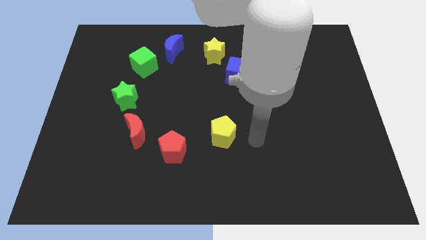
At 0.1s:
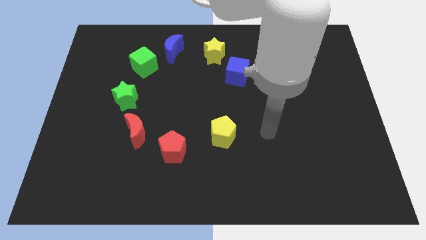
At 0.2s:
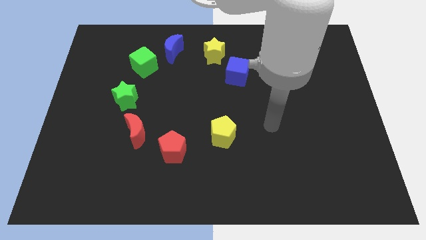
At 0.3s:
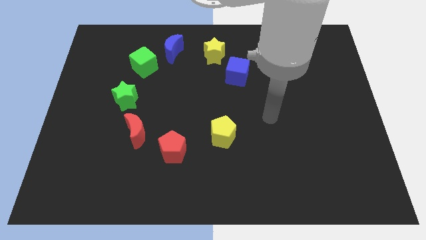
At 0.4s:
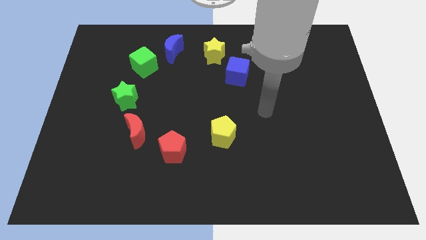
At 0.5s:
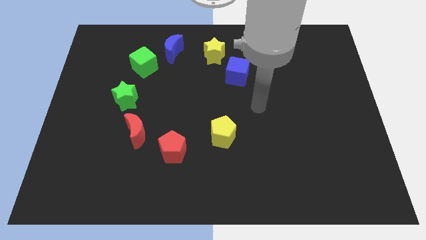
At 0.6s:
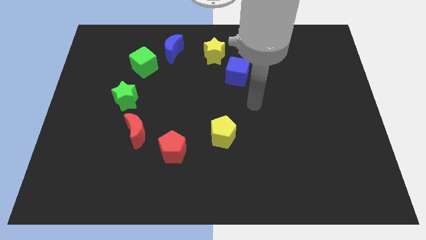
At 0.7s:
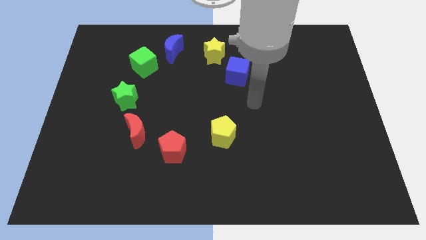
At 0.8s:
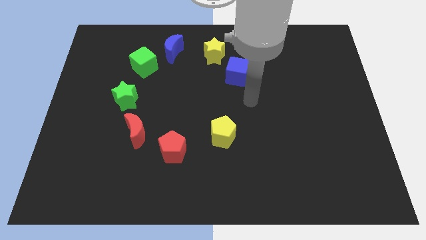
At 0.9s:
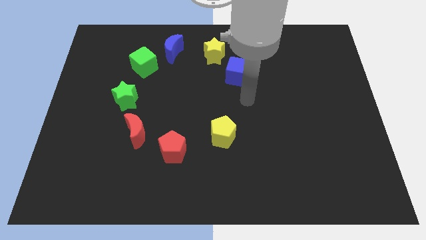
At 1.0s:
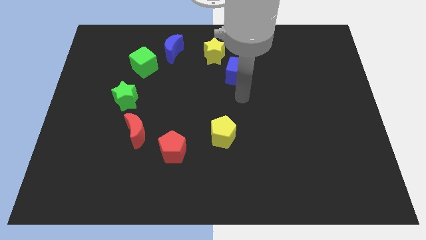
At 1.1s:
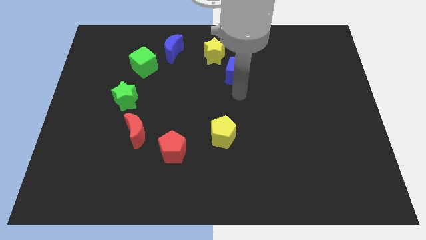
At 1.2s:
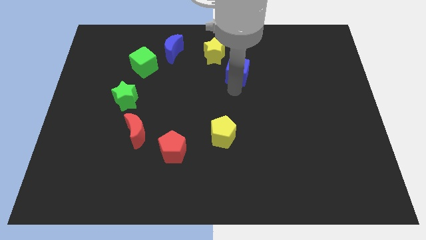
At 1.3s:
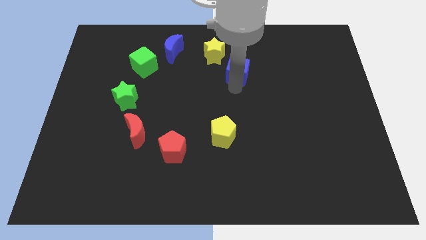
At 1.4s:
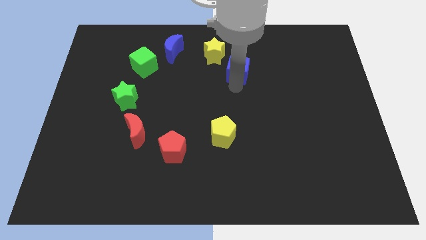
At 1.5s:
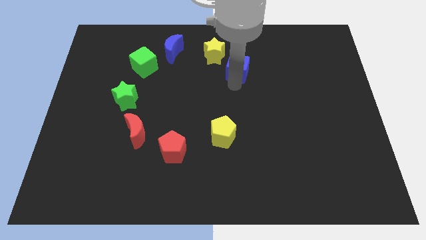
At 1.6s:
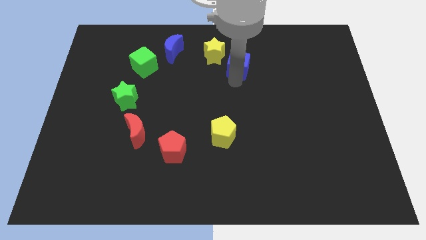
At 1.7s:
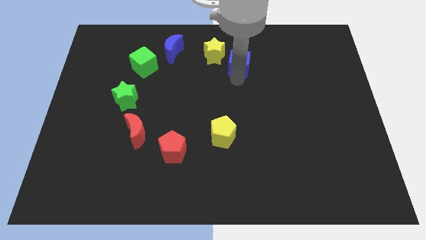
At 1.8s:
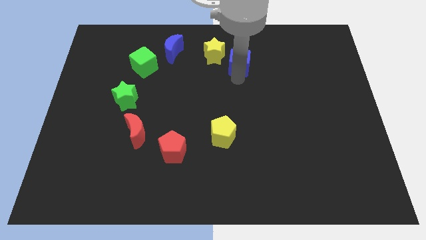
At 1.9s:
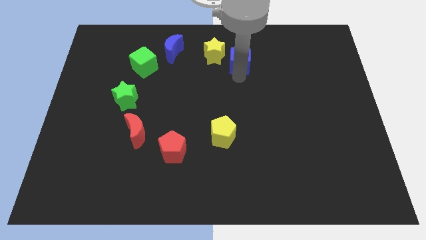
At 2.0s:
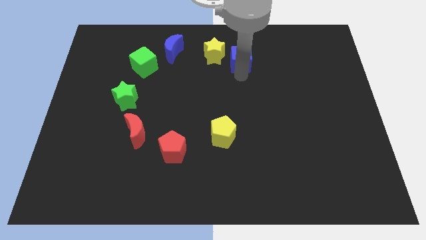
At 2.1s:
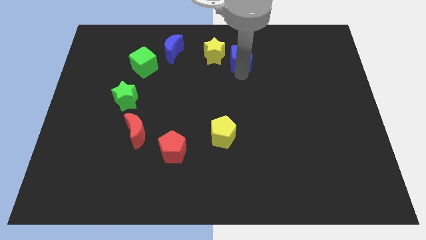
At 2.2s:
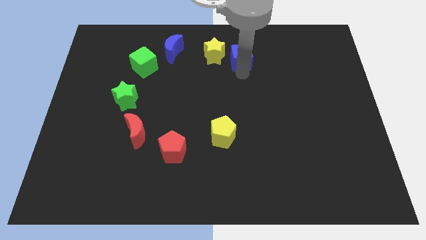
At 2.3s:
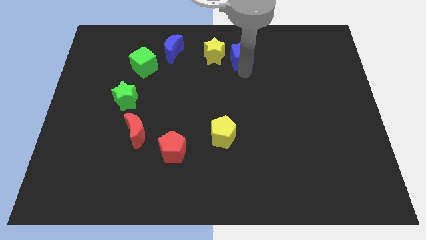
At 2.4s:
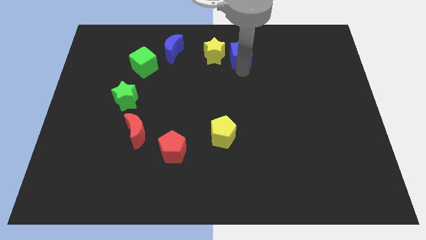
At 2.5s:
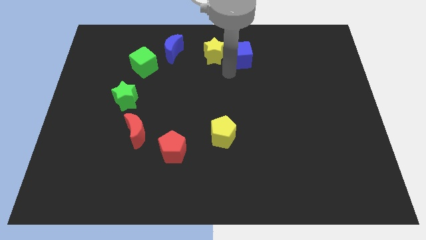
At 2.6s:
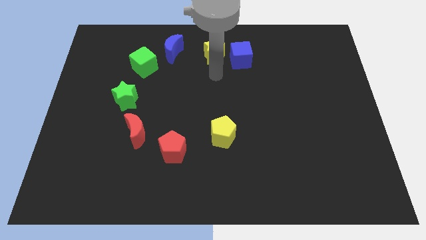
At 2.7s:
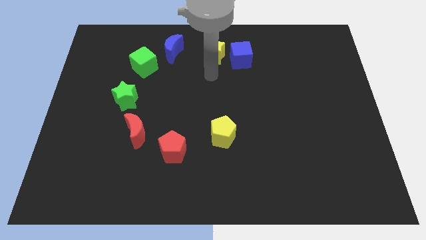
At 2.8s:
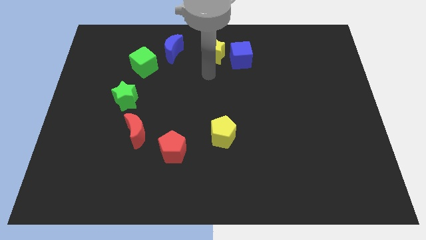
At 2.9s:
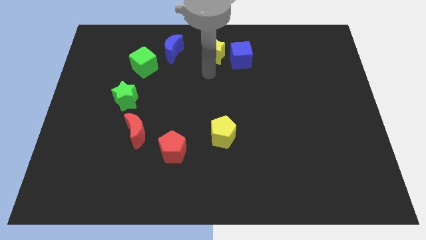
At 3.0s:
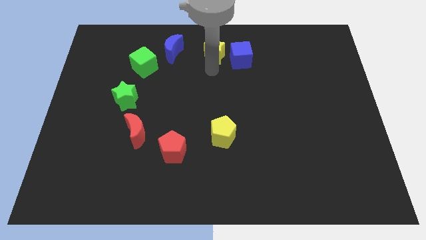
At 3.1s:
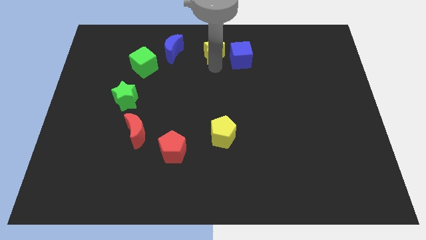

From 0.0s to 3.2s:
place blue cube to the right of yellow star

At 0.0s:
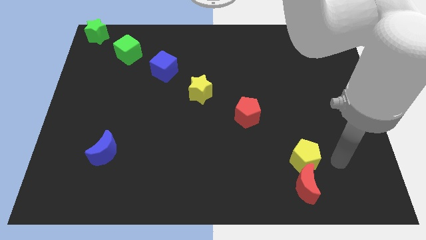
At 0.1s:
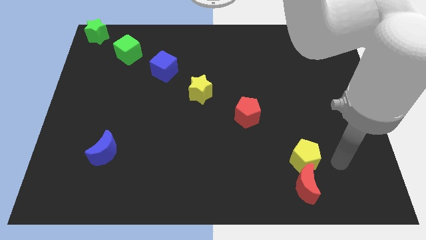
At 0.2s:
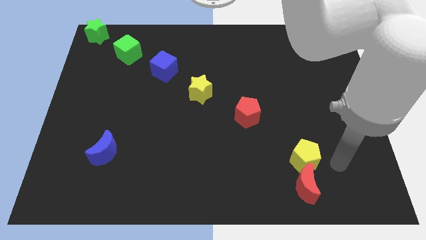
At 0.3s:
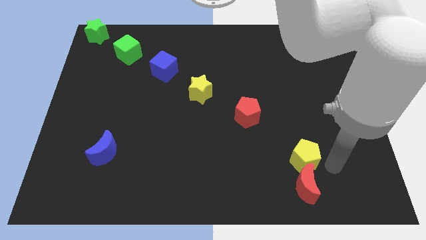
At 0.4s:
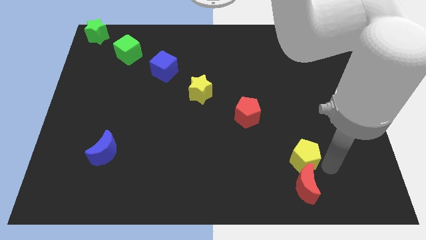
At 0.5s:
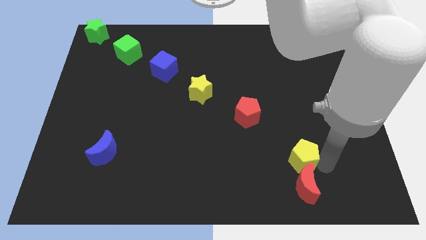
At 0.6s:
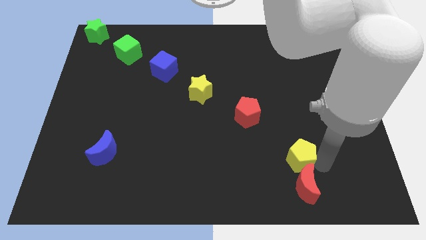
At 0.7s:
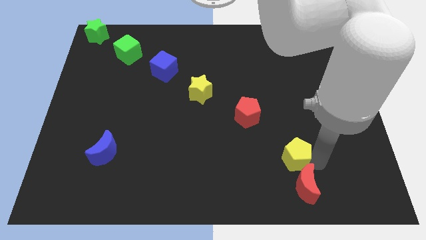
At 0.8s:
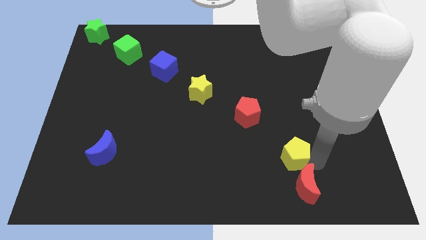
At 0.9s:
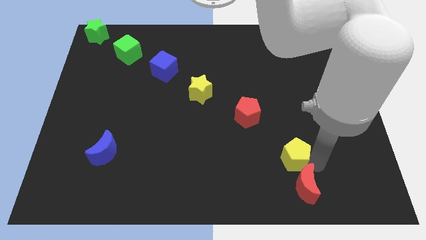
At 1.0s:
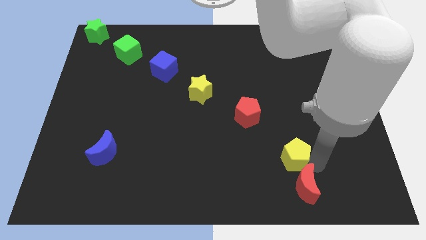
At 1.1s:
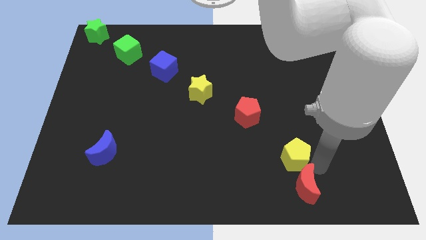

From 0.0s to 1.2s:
slightly push the yellow pentagon diagonally upwards

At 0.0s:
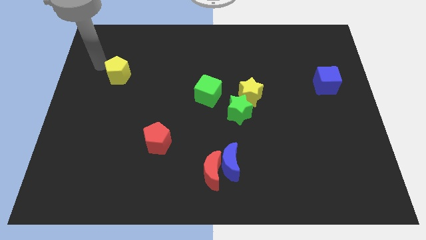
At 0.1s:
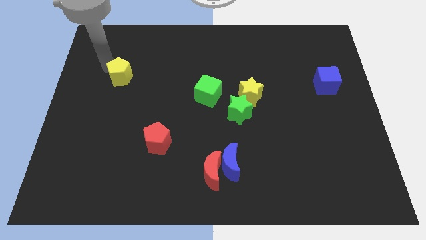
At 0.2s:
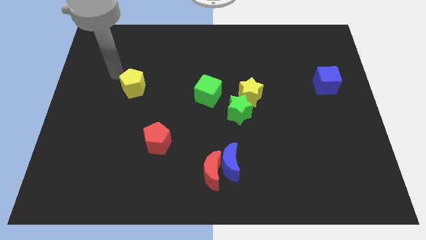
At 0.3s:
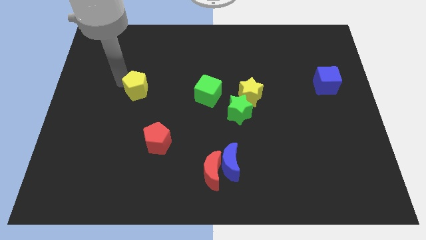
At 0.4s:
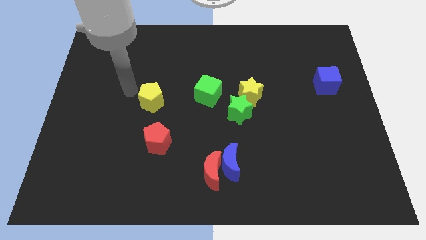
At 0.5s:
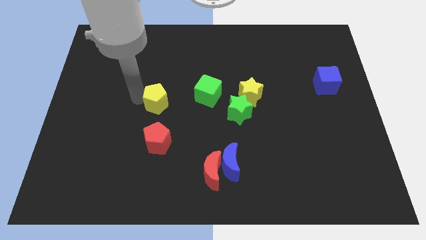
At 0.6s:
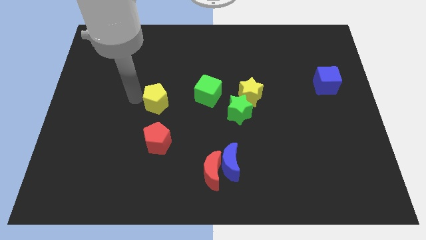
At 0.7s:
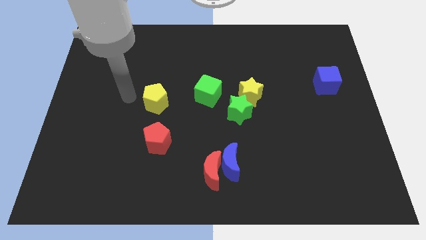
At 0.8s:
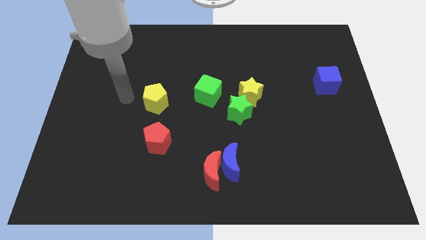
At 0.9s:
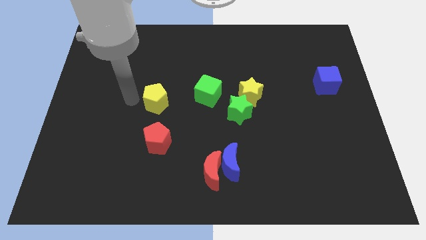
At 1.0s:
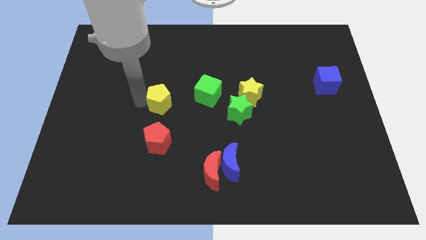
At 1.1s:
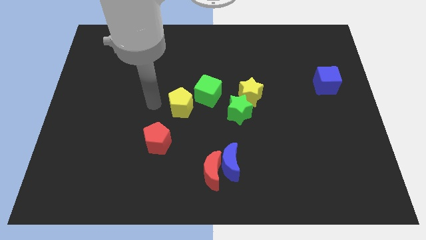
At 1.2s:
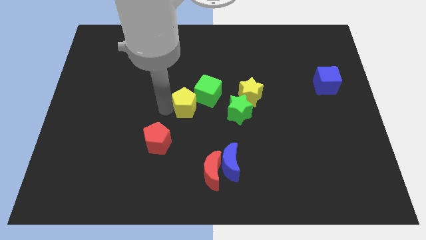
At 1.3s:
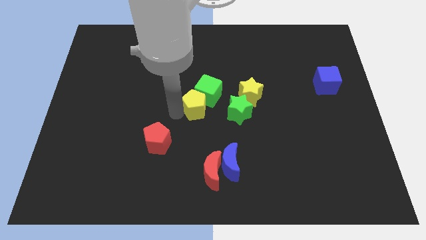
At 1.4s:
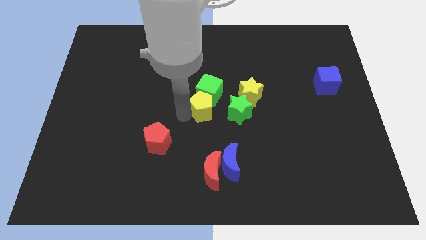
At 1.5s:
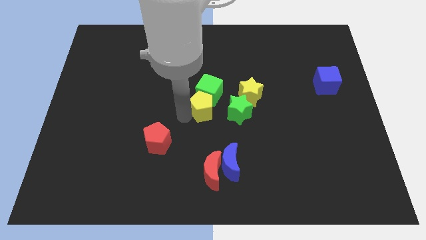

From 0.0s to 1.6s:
move the yellow pentagon into the bottom side of the green cube

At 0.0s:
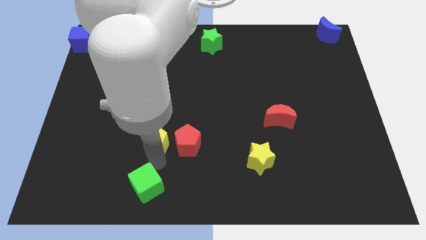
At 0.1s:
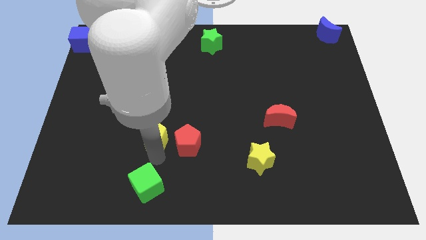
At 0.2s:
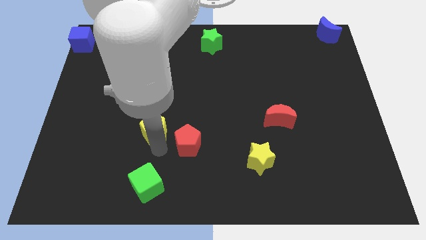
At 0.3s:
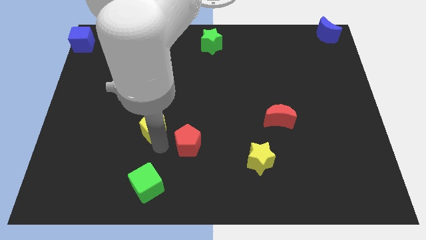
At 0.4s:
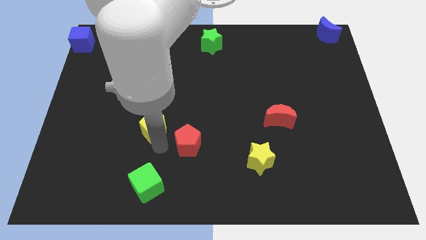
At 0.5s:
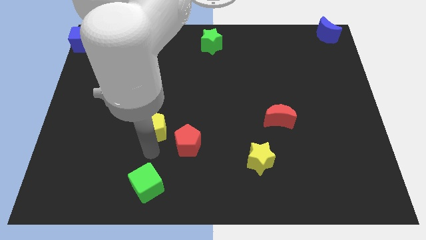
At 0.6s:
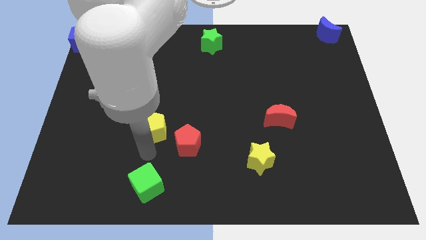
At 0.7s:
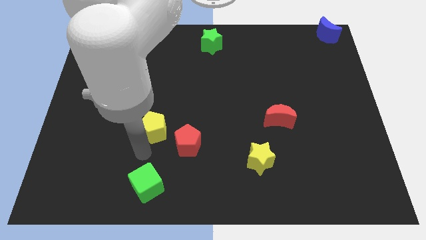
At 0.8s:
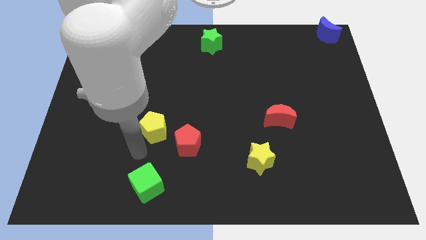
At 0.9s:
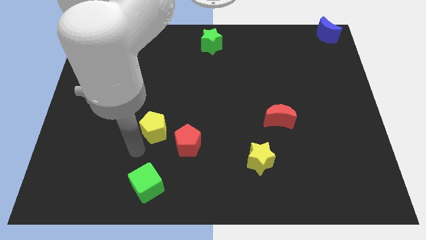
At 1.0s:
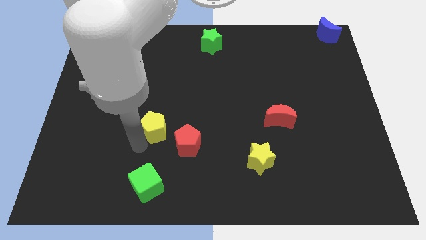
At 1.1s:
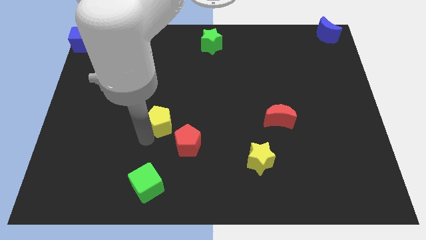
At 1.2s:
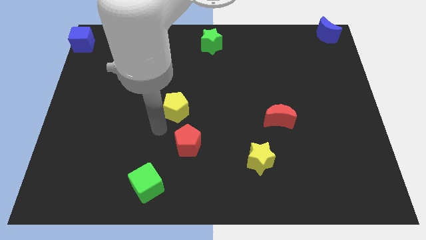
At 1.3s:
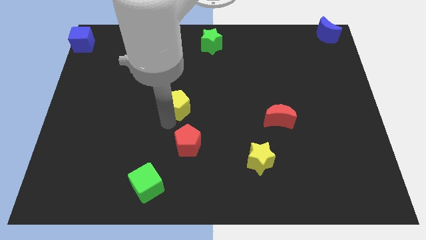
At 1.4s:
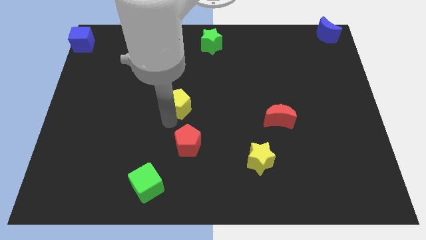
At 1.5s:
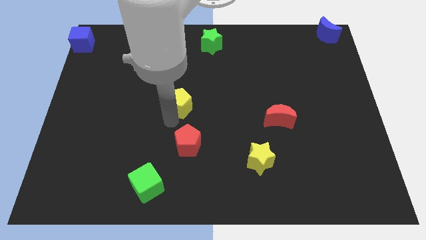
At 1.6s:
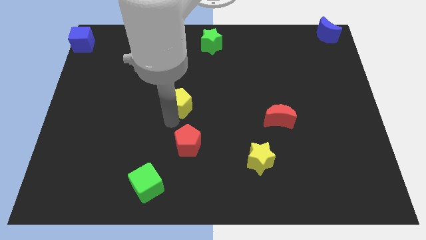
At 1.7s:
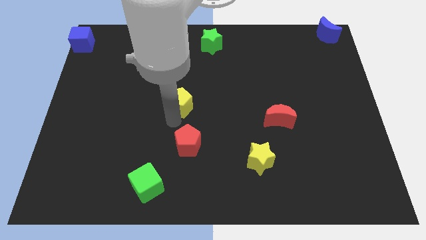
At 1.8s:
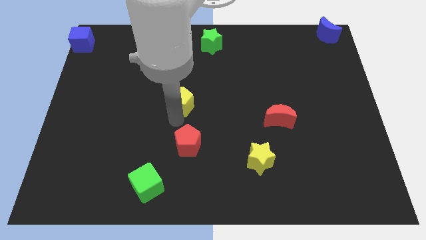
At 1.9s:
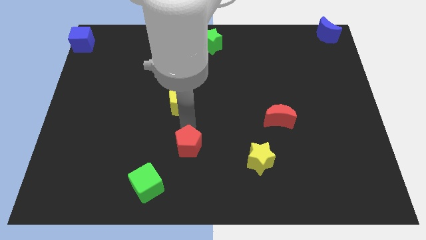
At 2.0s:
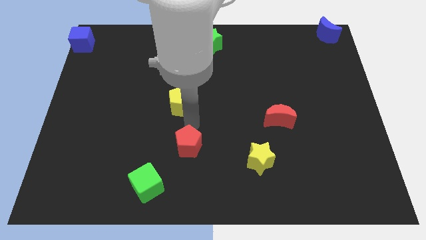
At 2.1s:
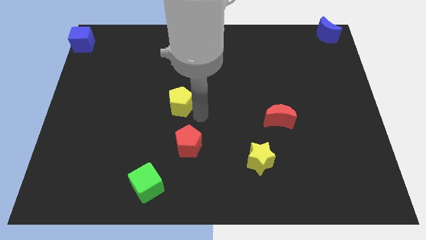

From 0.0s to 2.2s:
place the yellow pentagon in between the green star and red pentagon

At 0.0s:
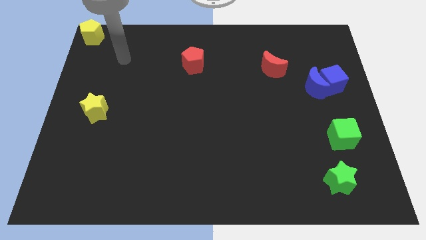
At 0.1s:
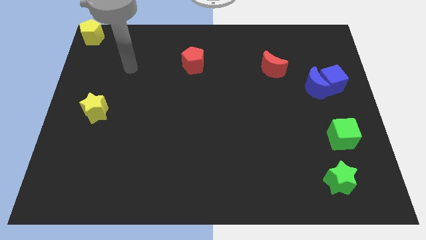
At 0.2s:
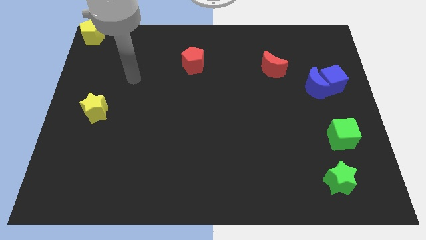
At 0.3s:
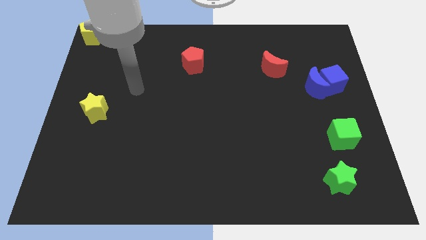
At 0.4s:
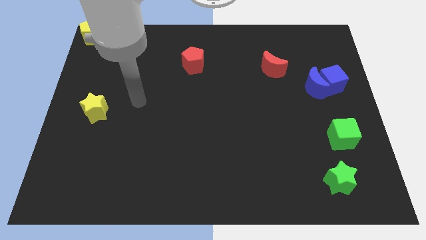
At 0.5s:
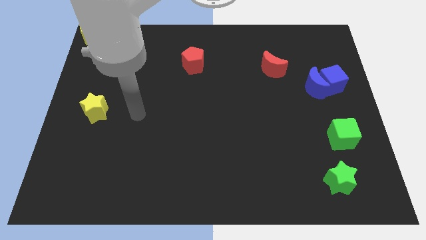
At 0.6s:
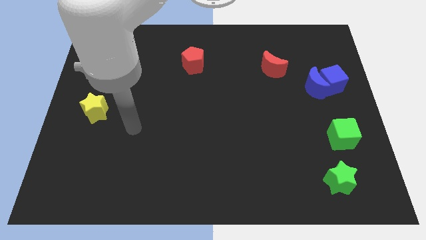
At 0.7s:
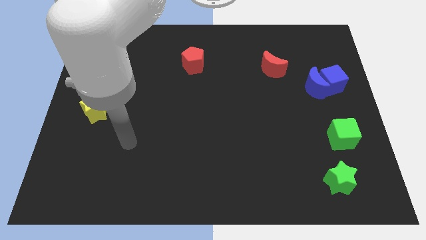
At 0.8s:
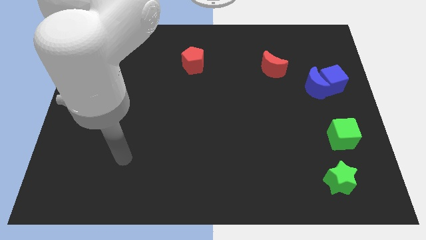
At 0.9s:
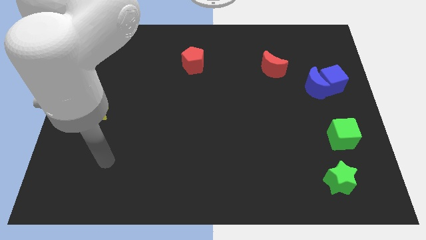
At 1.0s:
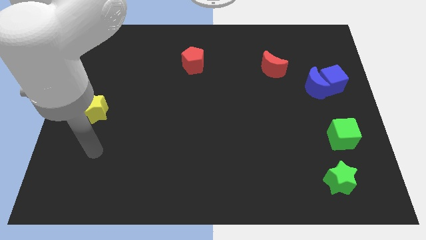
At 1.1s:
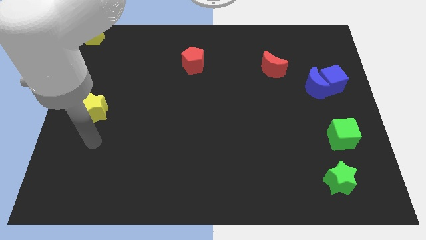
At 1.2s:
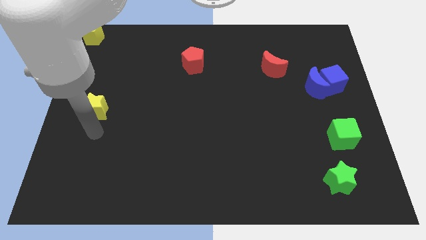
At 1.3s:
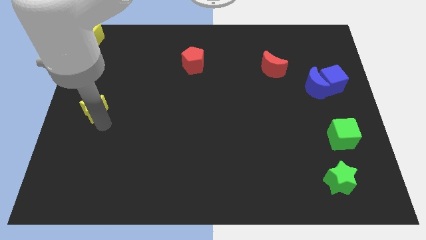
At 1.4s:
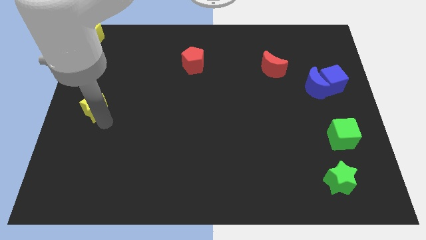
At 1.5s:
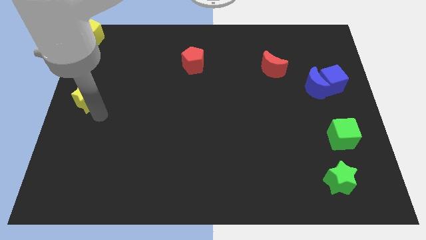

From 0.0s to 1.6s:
touch the bottom of yellow star
